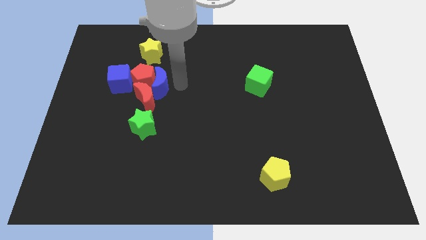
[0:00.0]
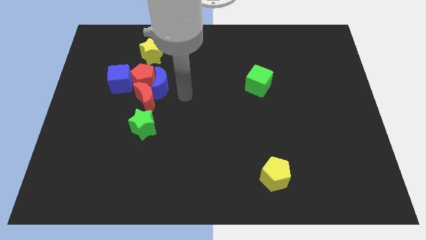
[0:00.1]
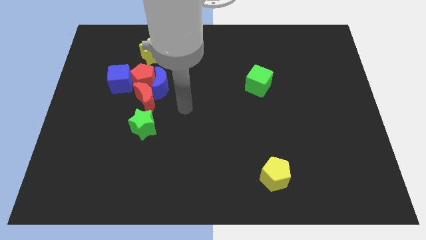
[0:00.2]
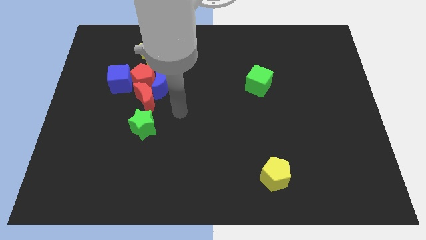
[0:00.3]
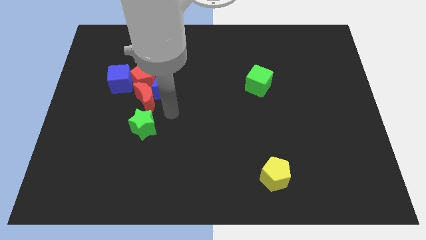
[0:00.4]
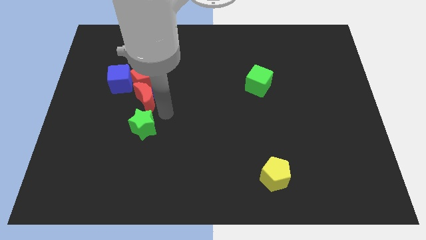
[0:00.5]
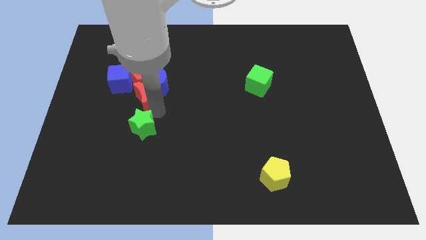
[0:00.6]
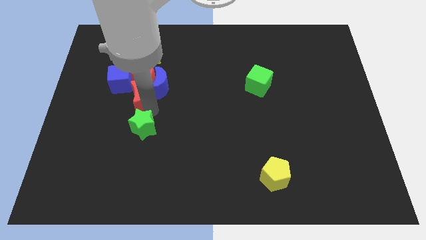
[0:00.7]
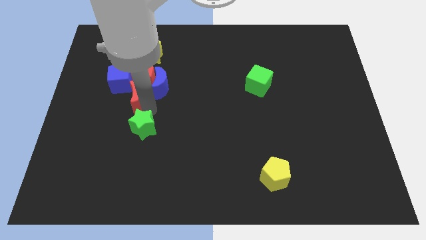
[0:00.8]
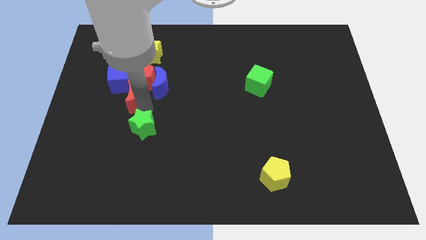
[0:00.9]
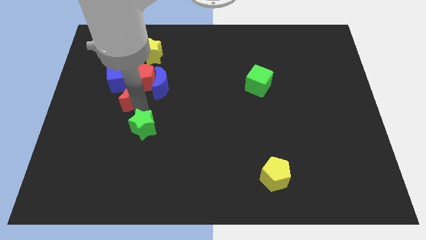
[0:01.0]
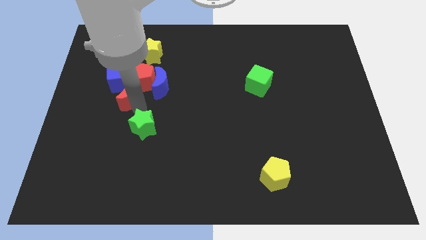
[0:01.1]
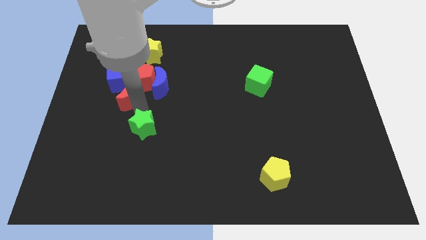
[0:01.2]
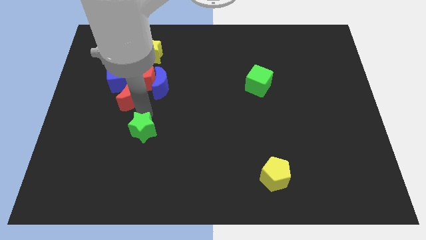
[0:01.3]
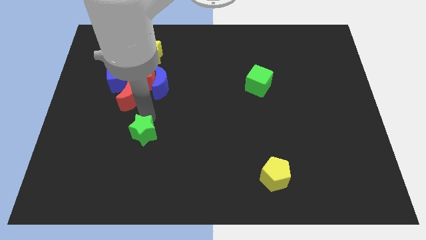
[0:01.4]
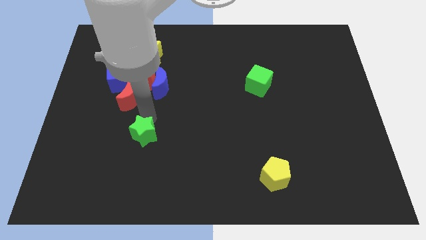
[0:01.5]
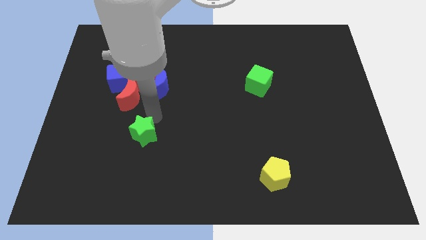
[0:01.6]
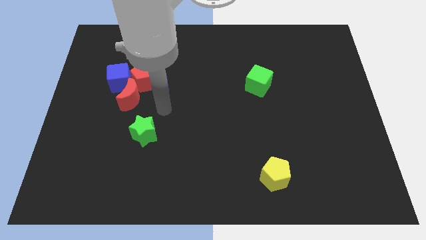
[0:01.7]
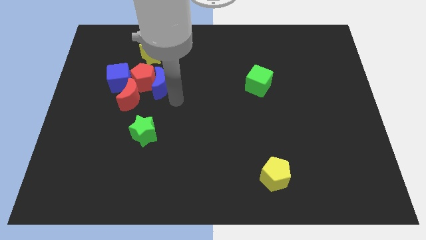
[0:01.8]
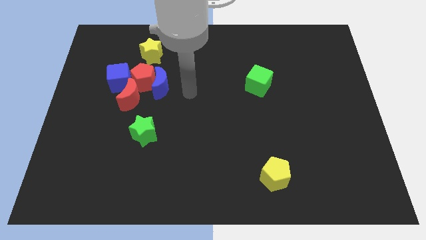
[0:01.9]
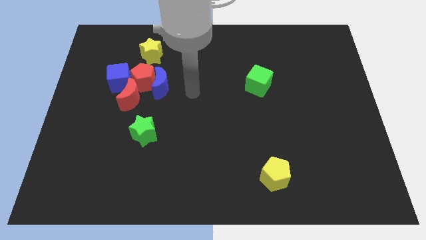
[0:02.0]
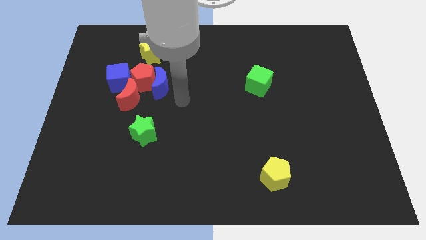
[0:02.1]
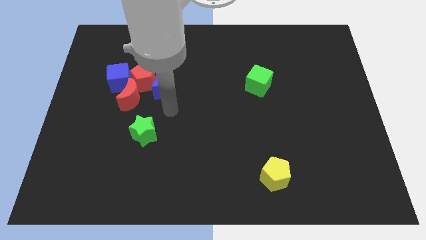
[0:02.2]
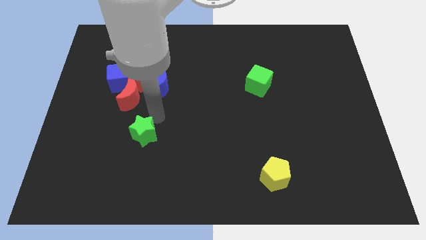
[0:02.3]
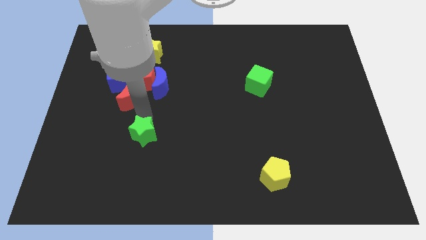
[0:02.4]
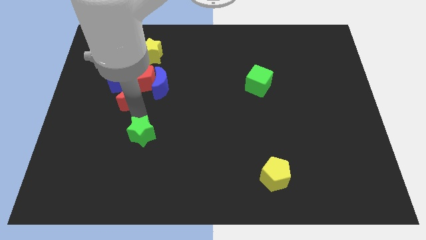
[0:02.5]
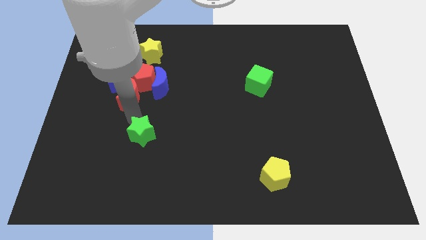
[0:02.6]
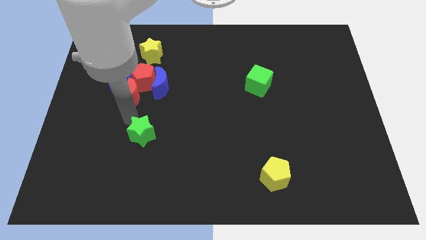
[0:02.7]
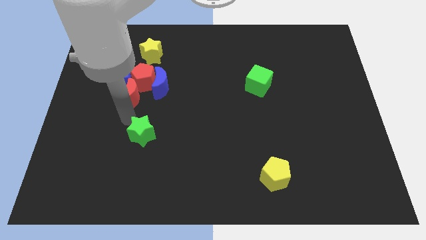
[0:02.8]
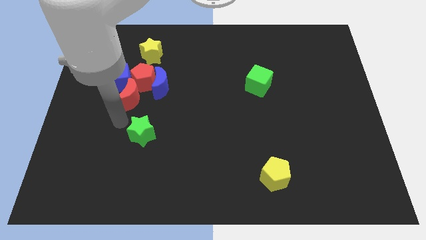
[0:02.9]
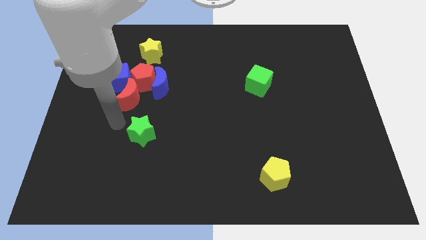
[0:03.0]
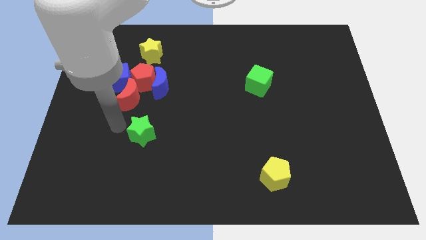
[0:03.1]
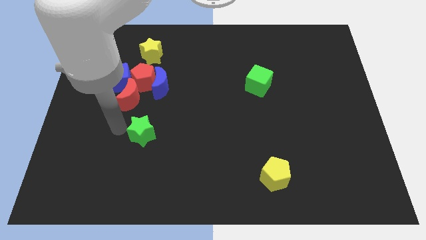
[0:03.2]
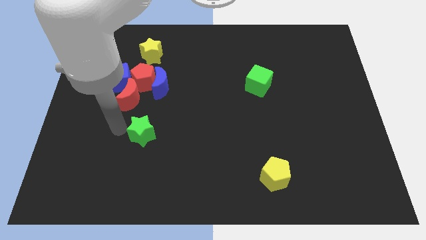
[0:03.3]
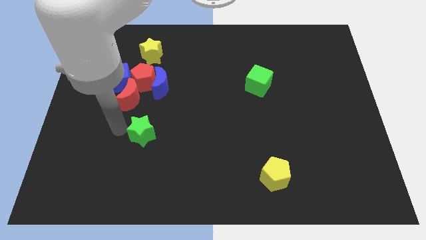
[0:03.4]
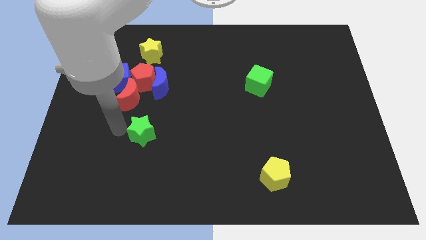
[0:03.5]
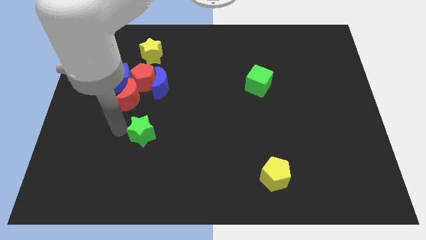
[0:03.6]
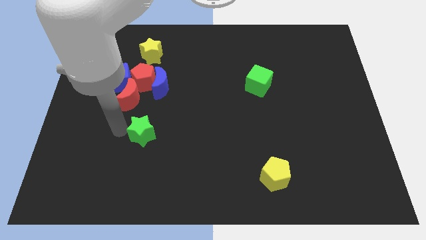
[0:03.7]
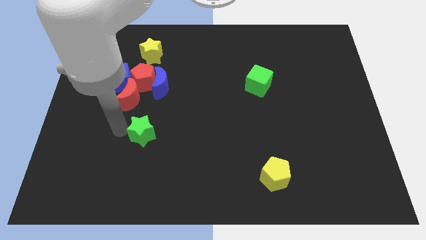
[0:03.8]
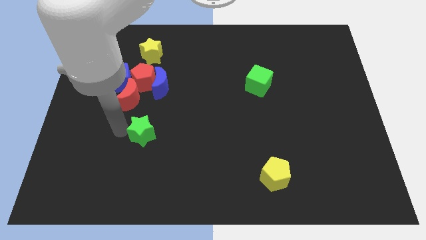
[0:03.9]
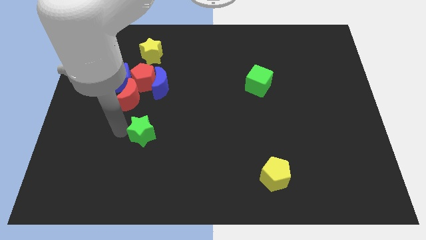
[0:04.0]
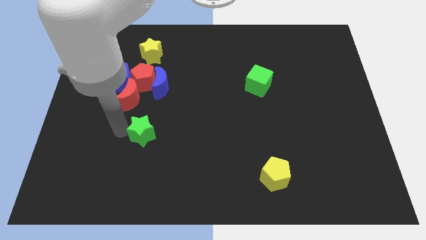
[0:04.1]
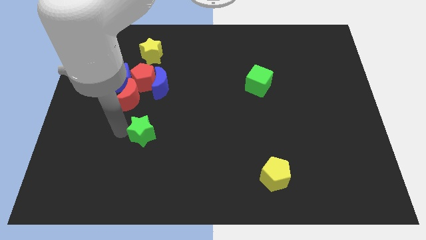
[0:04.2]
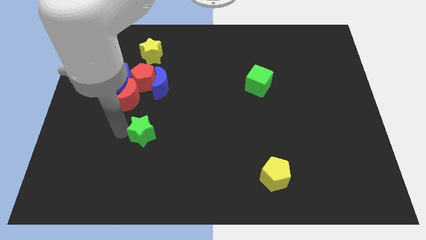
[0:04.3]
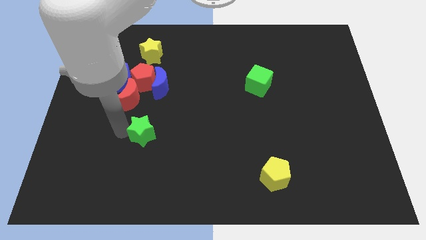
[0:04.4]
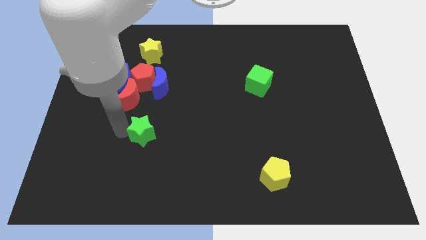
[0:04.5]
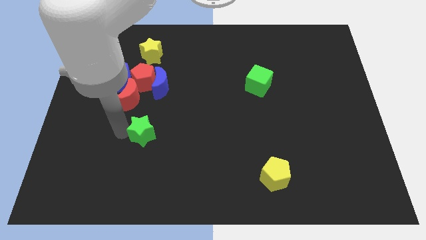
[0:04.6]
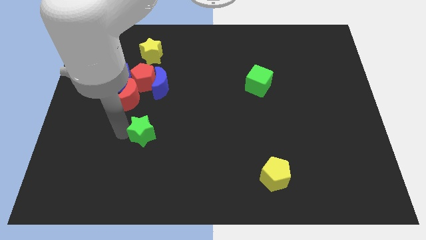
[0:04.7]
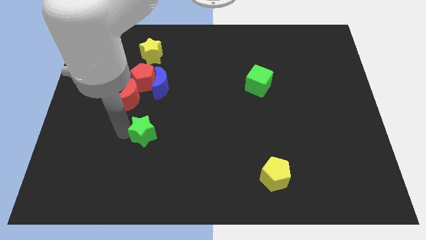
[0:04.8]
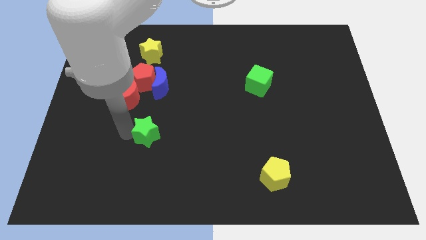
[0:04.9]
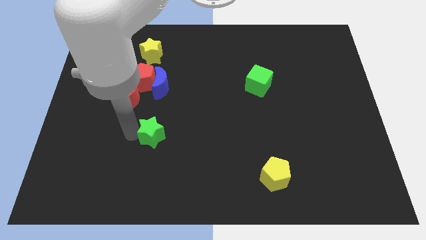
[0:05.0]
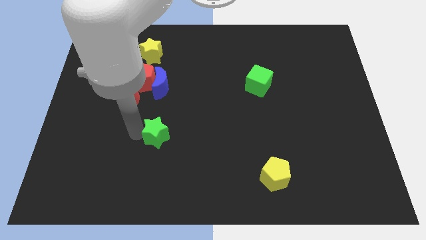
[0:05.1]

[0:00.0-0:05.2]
place the green star down to the blue moon

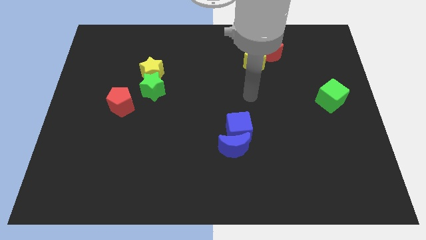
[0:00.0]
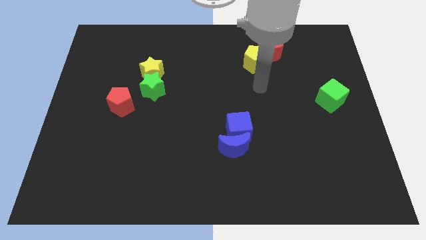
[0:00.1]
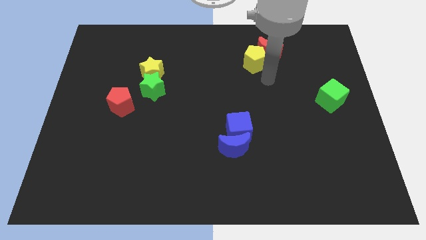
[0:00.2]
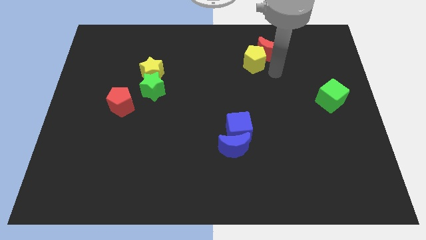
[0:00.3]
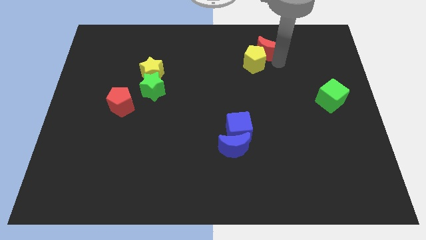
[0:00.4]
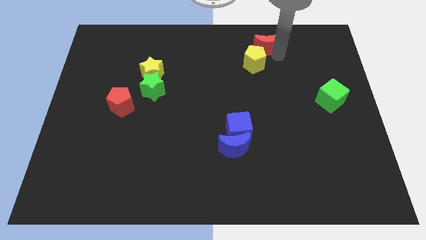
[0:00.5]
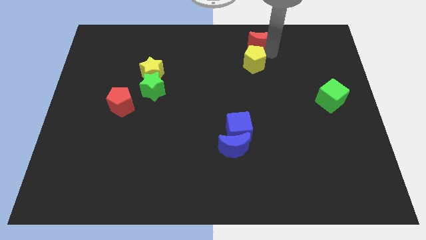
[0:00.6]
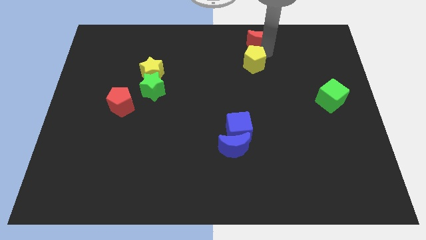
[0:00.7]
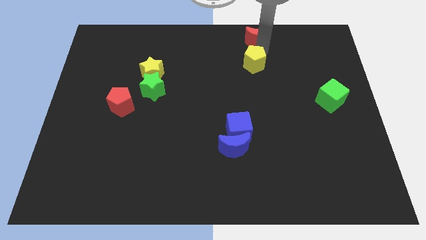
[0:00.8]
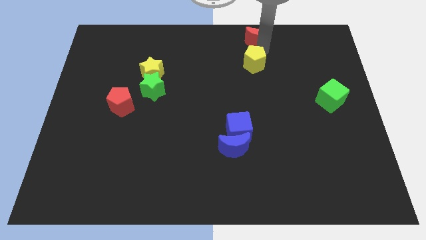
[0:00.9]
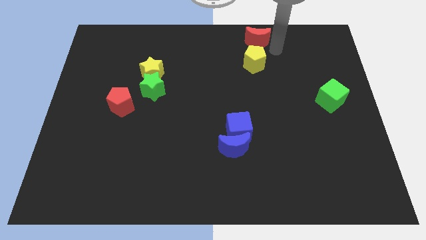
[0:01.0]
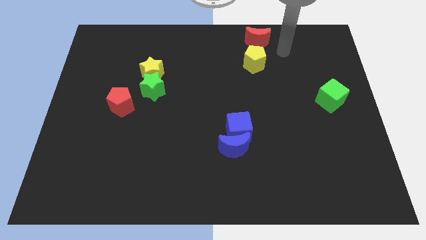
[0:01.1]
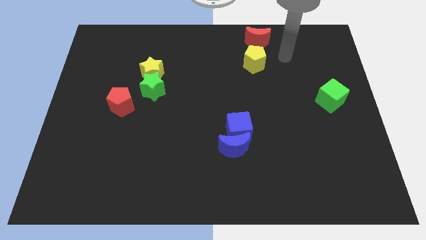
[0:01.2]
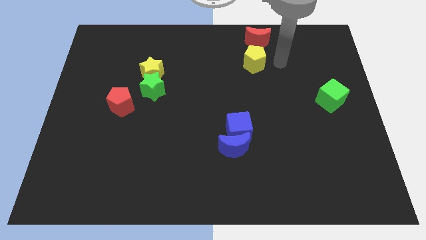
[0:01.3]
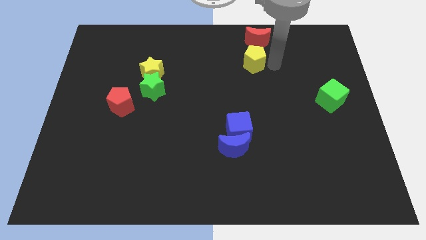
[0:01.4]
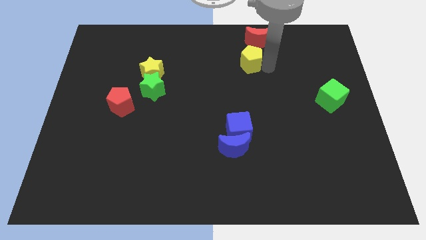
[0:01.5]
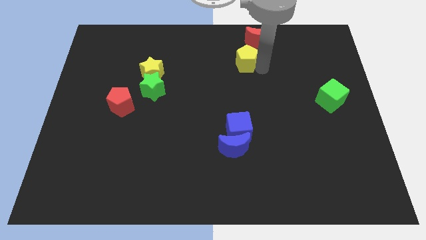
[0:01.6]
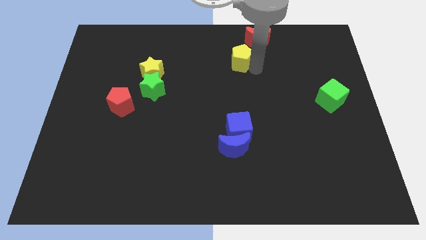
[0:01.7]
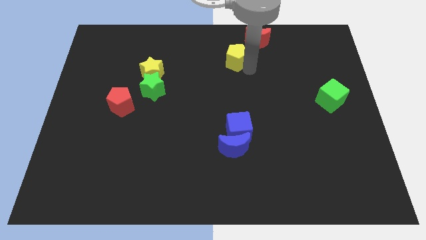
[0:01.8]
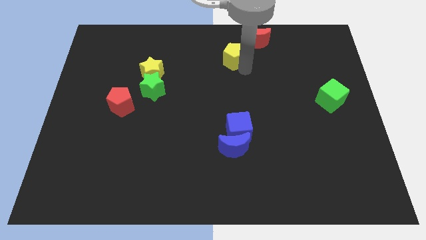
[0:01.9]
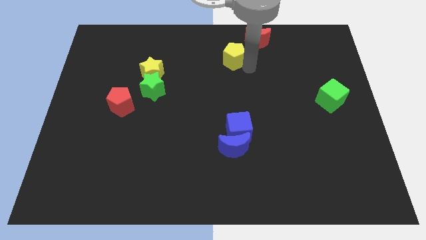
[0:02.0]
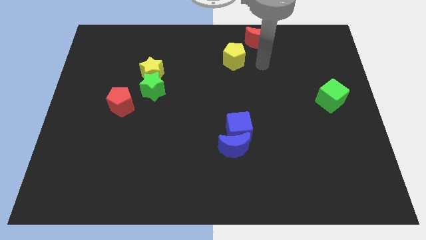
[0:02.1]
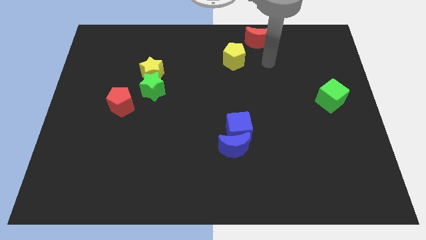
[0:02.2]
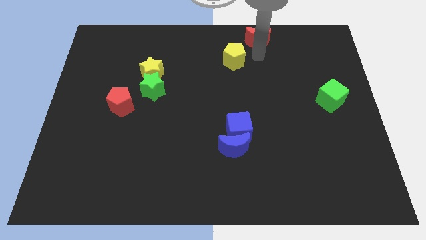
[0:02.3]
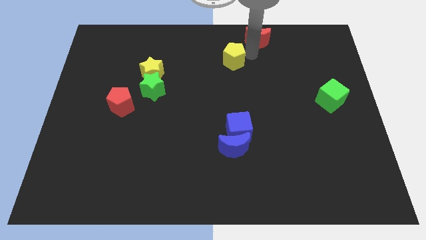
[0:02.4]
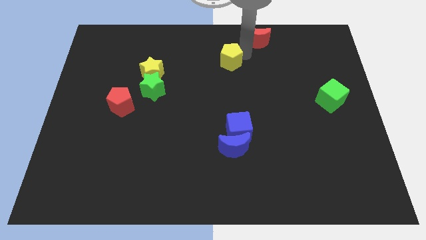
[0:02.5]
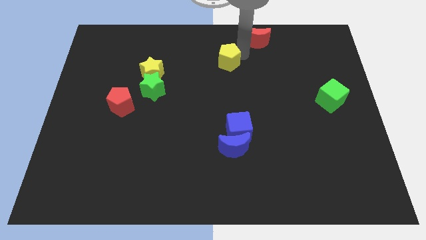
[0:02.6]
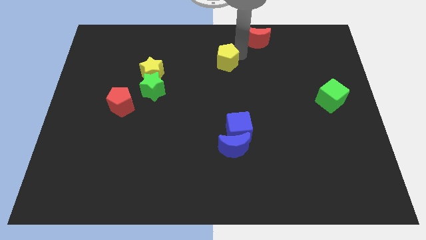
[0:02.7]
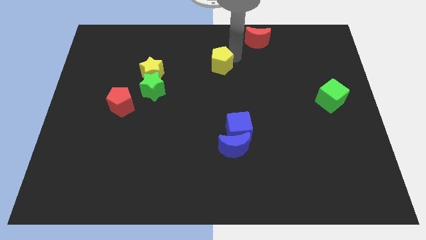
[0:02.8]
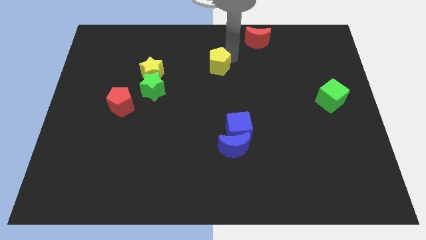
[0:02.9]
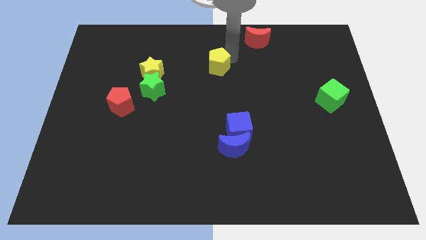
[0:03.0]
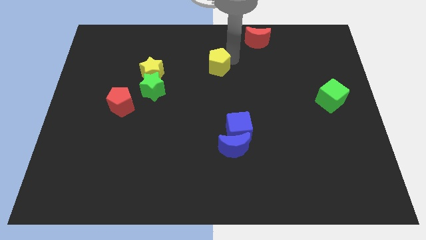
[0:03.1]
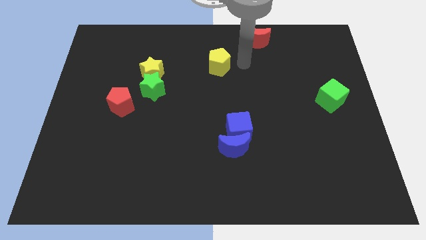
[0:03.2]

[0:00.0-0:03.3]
push the yellow pentagon to the center

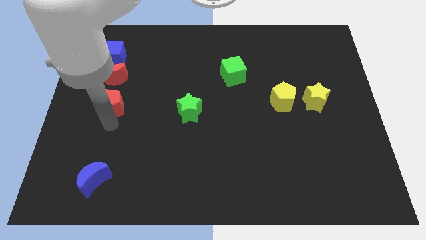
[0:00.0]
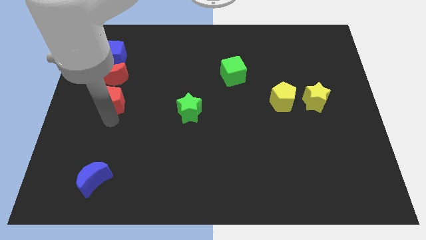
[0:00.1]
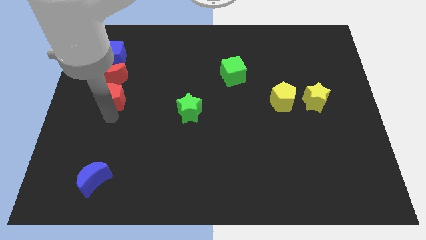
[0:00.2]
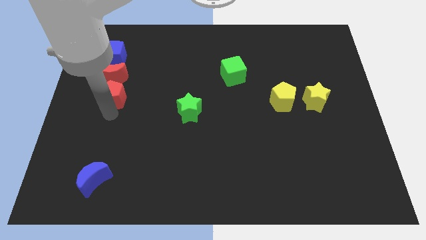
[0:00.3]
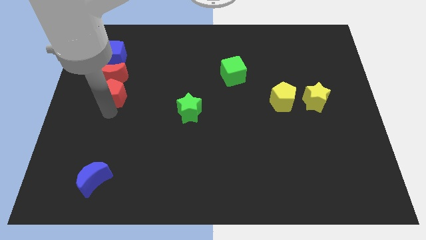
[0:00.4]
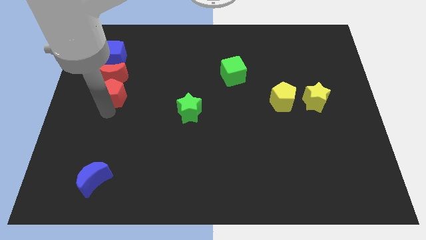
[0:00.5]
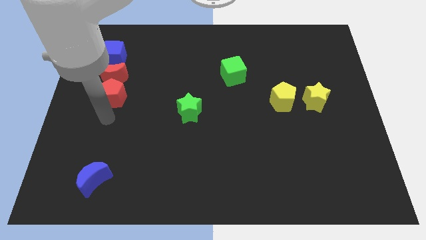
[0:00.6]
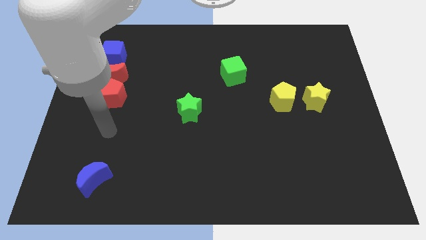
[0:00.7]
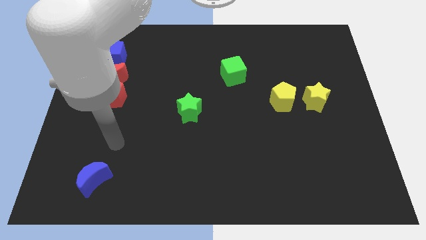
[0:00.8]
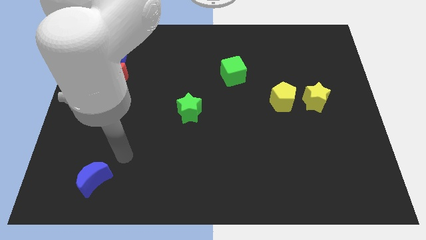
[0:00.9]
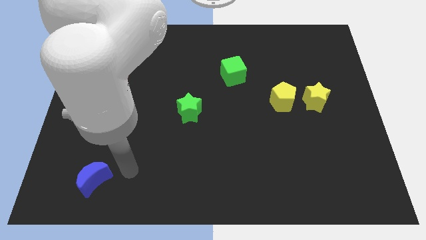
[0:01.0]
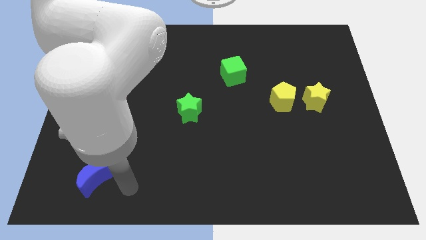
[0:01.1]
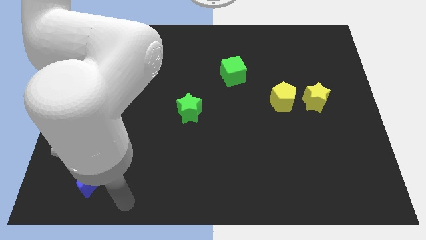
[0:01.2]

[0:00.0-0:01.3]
move the red pentagon below the red crescent
